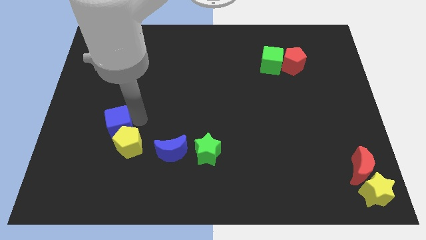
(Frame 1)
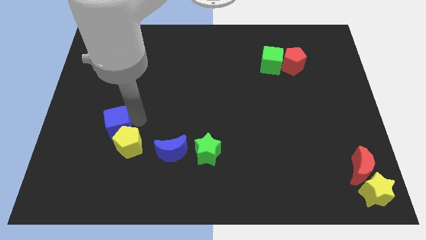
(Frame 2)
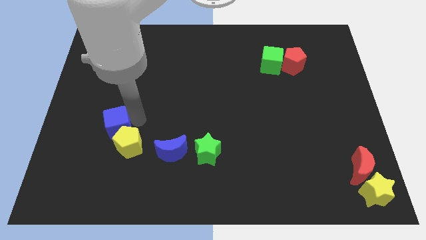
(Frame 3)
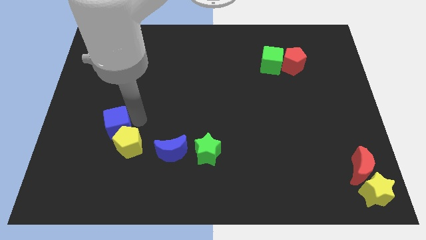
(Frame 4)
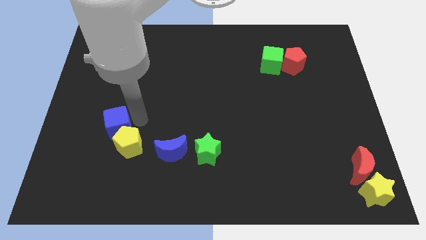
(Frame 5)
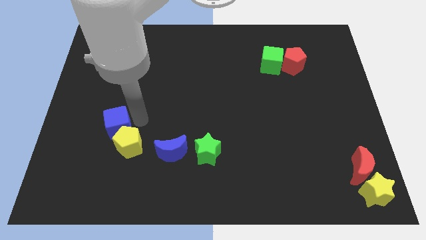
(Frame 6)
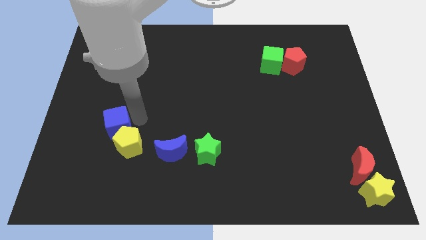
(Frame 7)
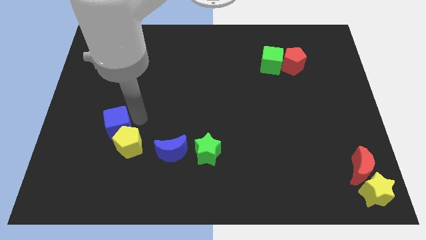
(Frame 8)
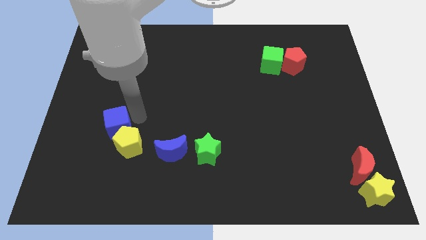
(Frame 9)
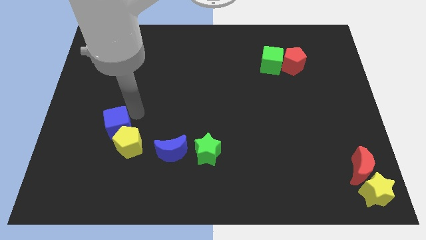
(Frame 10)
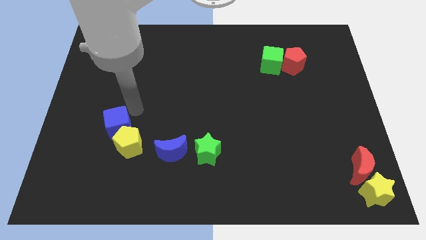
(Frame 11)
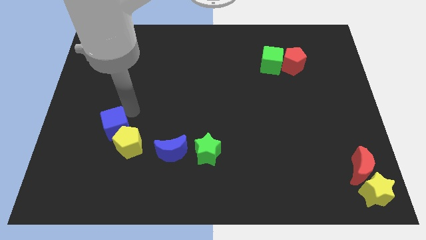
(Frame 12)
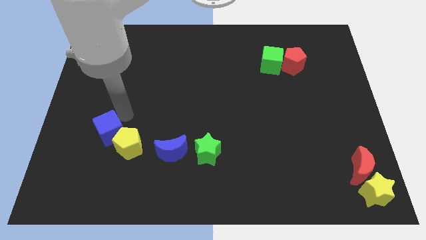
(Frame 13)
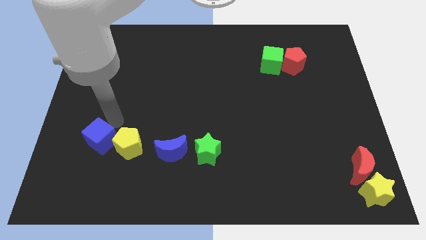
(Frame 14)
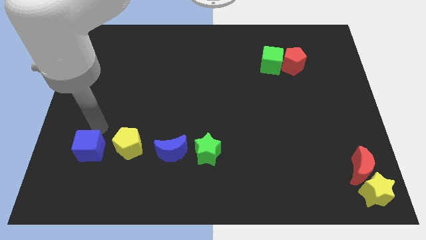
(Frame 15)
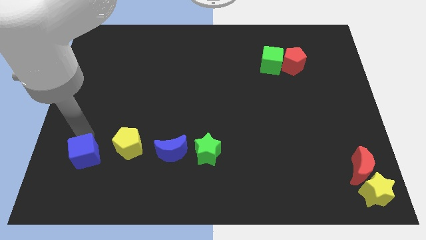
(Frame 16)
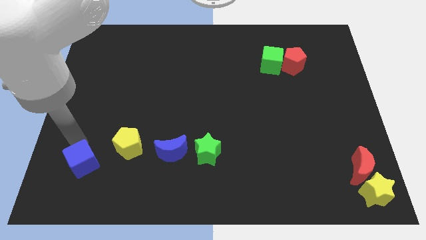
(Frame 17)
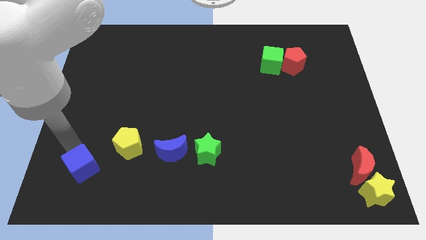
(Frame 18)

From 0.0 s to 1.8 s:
move the blue cube left to the yellow pentagon

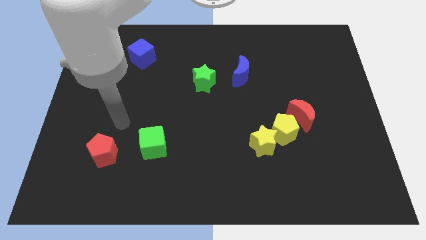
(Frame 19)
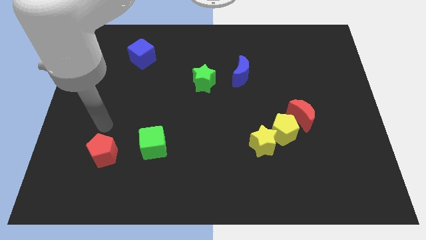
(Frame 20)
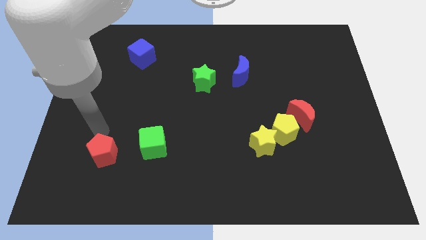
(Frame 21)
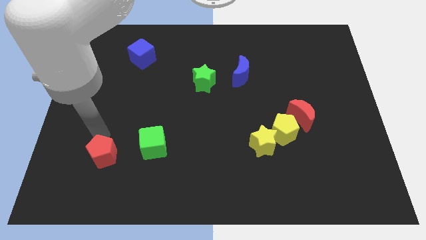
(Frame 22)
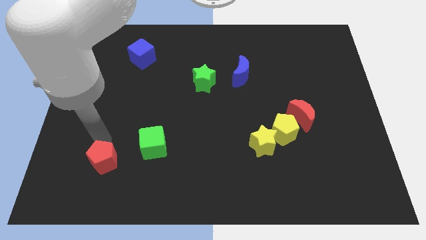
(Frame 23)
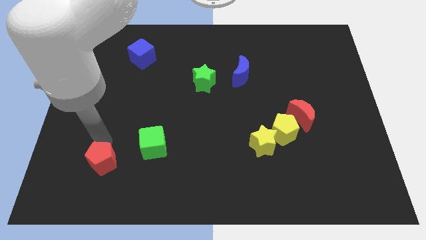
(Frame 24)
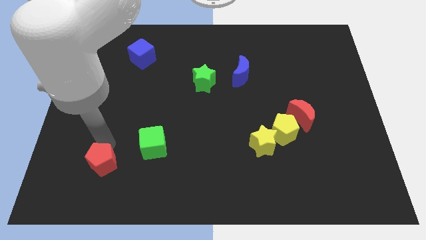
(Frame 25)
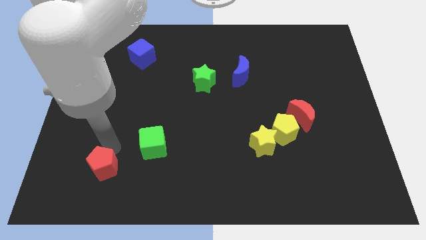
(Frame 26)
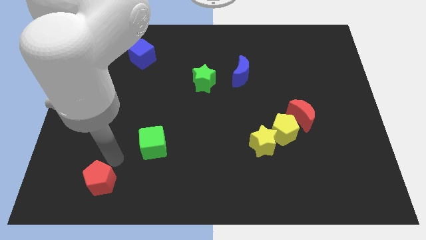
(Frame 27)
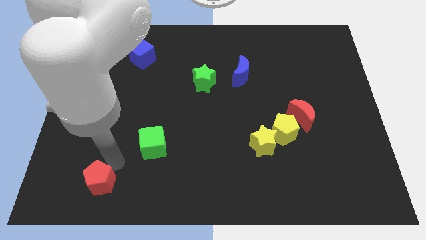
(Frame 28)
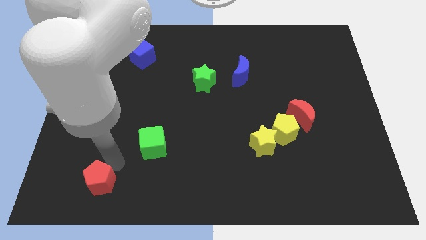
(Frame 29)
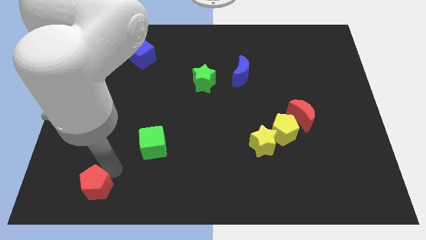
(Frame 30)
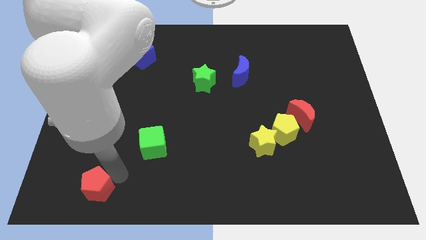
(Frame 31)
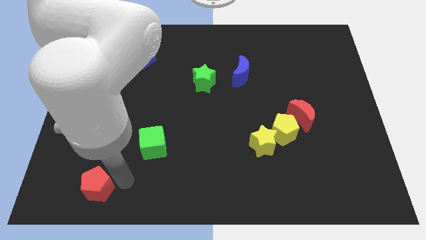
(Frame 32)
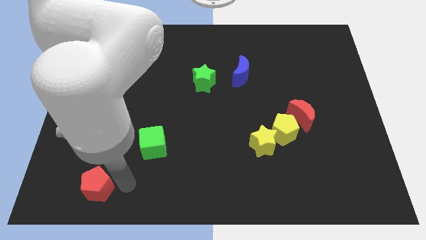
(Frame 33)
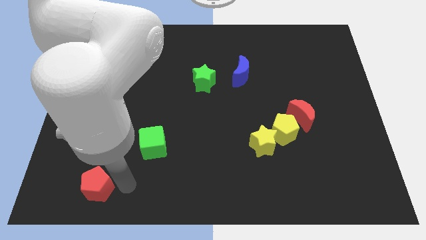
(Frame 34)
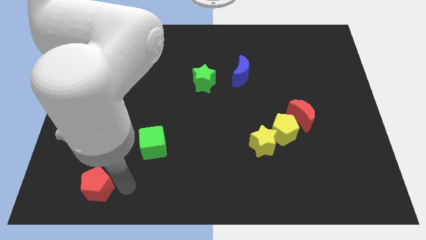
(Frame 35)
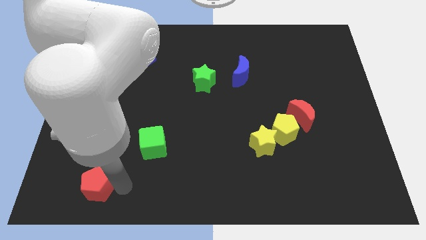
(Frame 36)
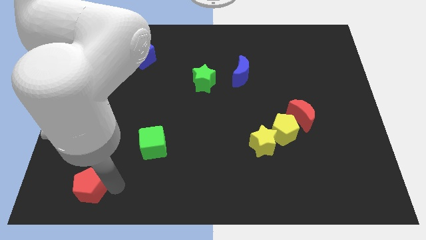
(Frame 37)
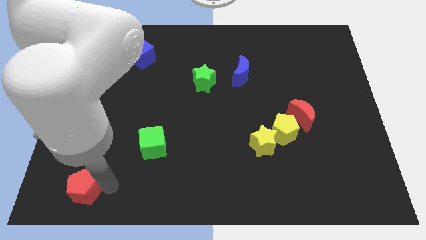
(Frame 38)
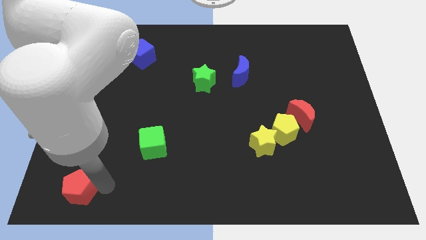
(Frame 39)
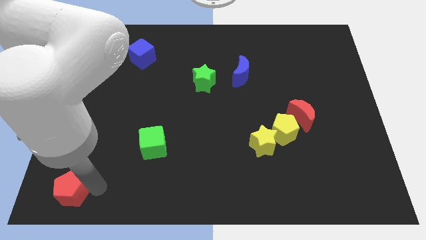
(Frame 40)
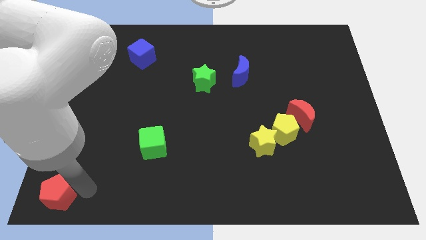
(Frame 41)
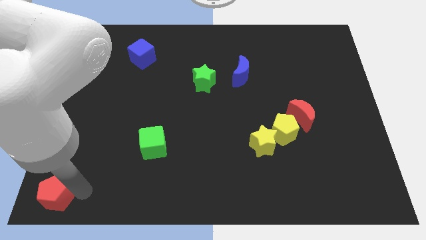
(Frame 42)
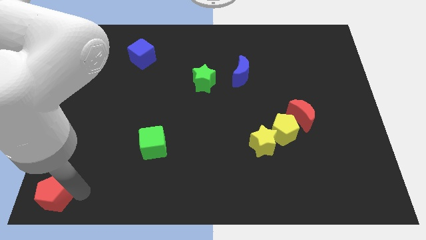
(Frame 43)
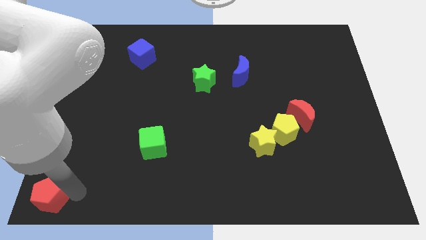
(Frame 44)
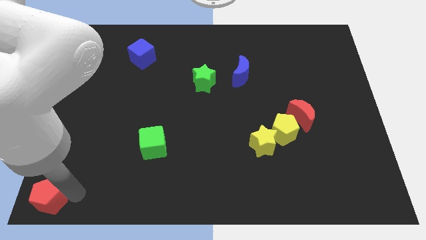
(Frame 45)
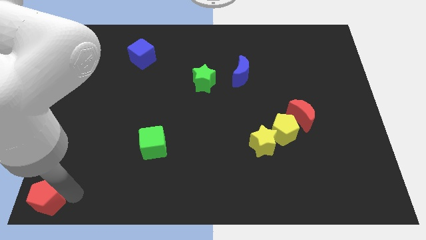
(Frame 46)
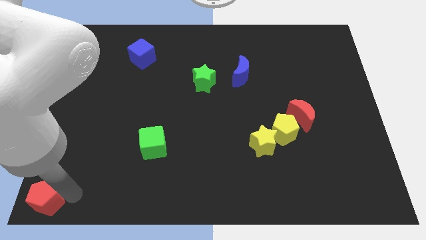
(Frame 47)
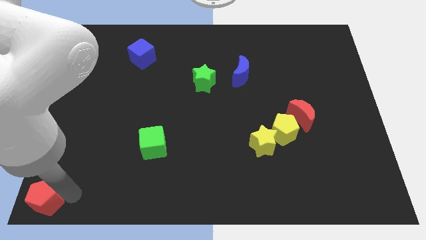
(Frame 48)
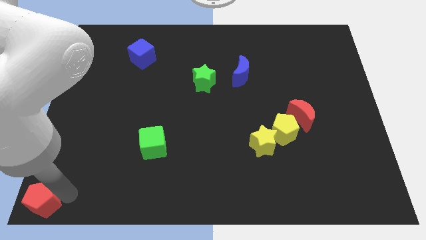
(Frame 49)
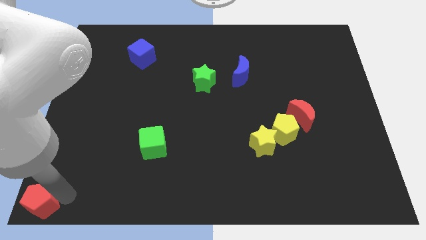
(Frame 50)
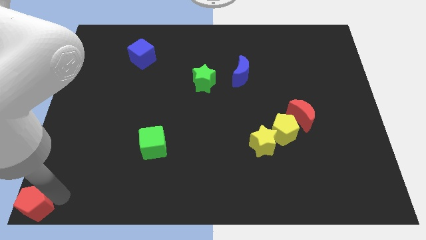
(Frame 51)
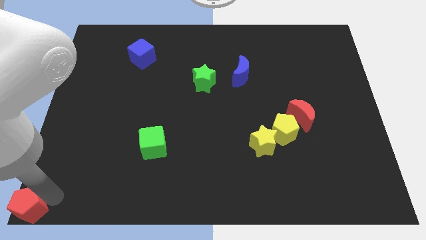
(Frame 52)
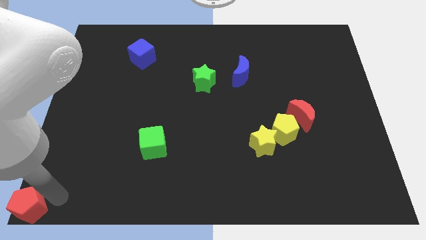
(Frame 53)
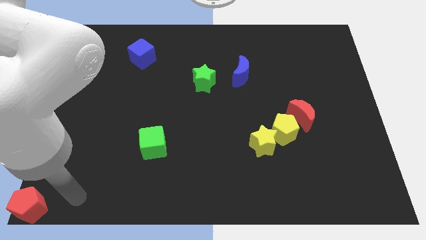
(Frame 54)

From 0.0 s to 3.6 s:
push the red pentagon to the bottom left corner of the board

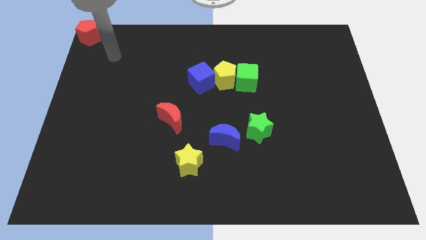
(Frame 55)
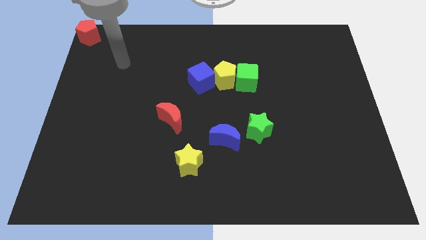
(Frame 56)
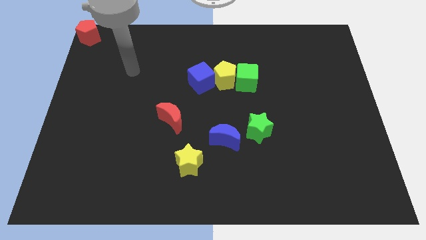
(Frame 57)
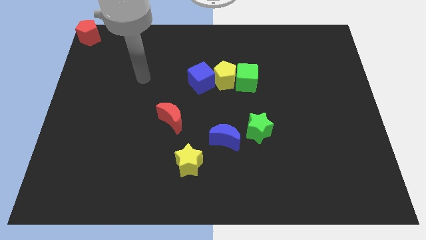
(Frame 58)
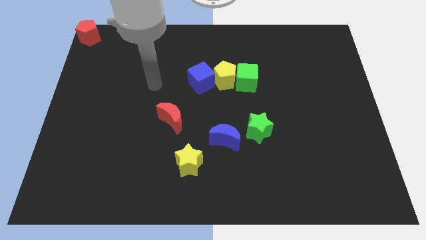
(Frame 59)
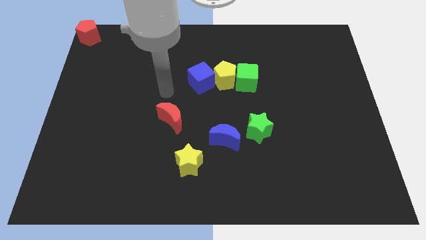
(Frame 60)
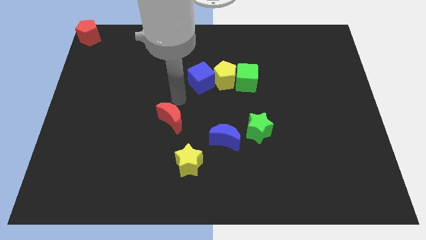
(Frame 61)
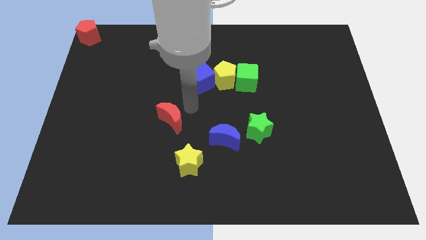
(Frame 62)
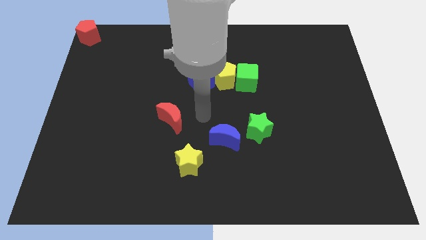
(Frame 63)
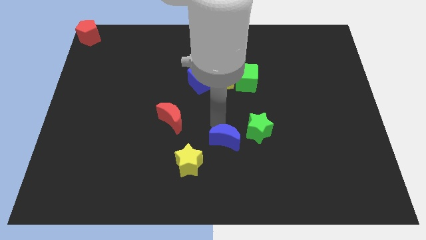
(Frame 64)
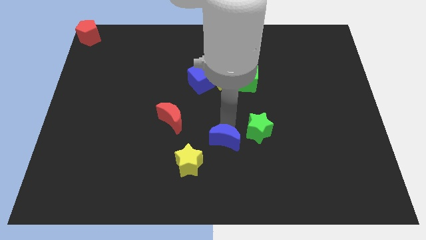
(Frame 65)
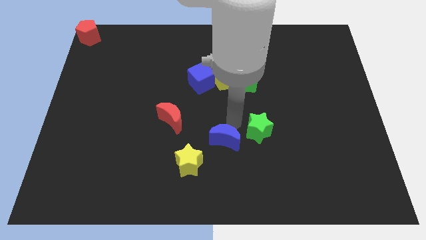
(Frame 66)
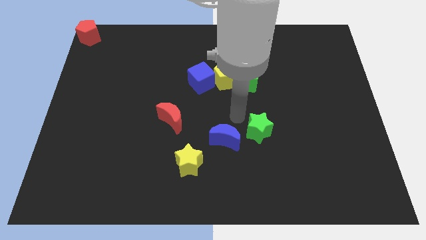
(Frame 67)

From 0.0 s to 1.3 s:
place the arm above the blue moon

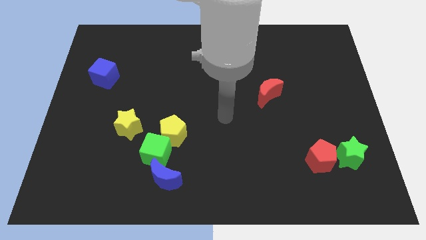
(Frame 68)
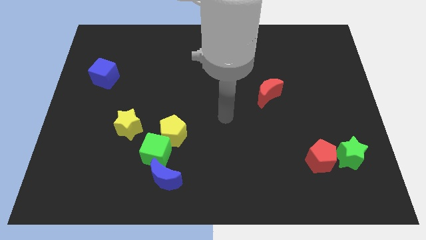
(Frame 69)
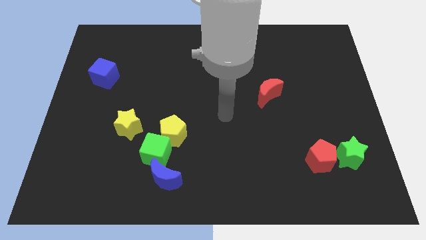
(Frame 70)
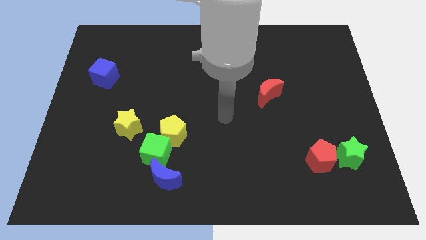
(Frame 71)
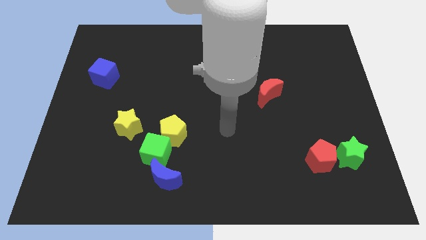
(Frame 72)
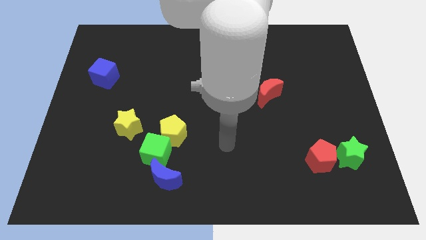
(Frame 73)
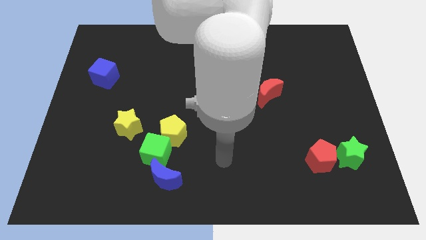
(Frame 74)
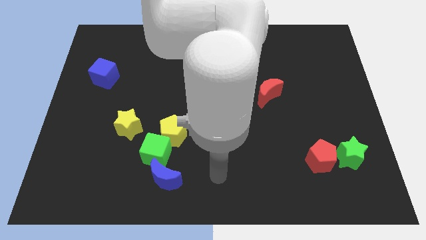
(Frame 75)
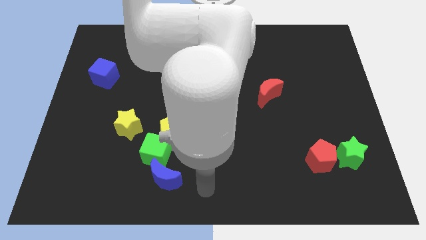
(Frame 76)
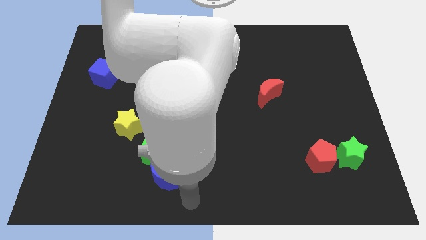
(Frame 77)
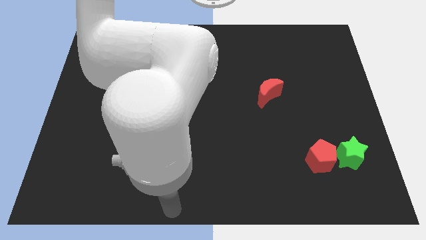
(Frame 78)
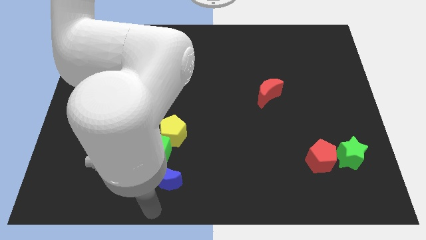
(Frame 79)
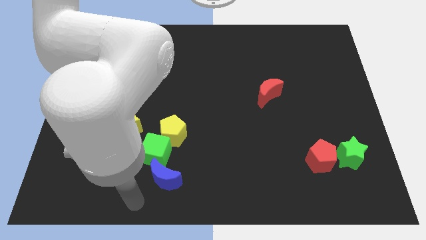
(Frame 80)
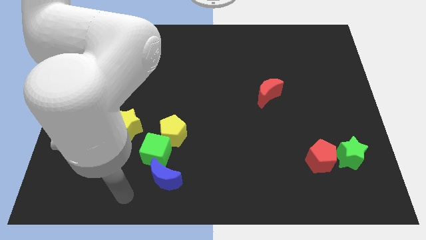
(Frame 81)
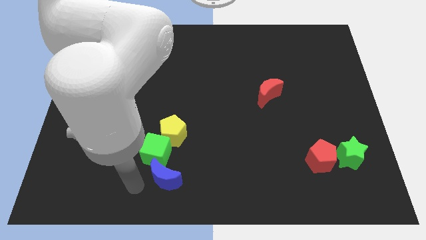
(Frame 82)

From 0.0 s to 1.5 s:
move the arm towards the blue crescent

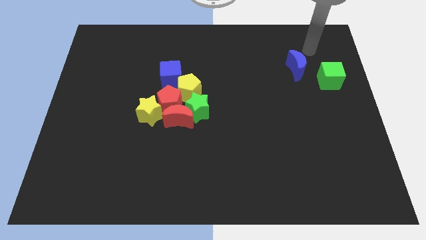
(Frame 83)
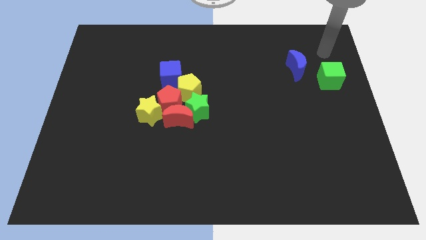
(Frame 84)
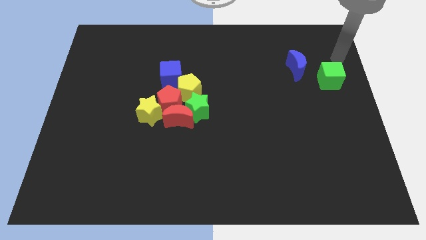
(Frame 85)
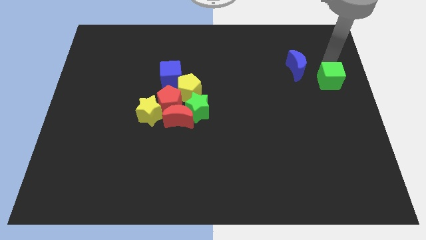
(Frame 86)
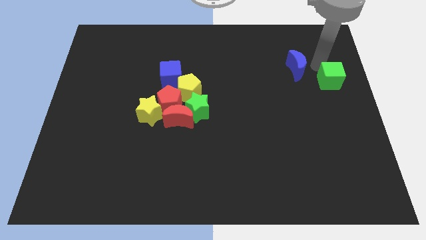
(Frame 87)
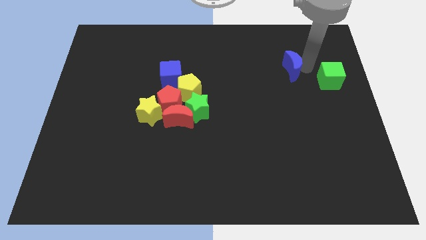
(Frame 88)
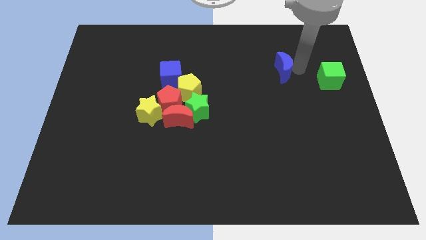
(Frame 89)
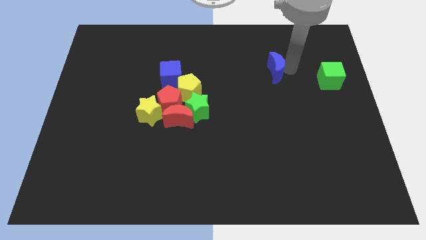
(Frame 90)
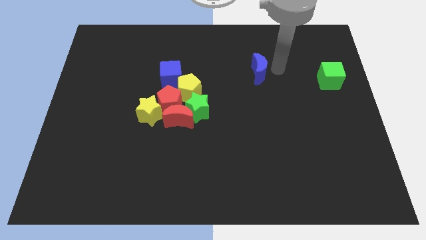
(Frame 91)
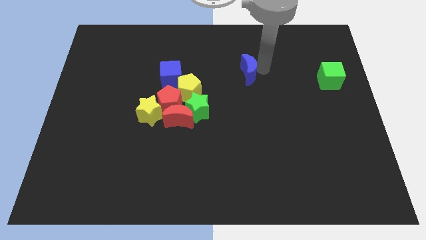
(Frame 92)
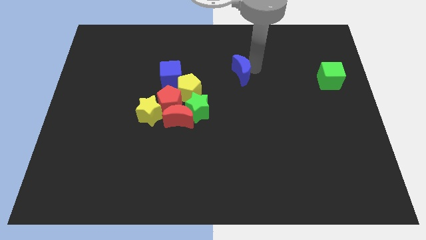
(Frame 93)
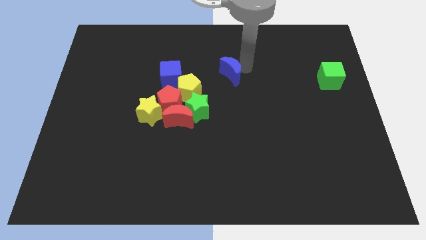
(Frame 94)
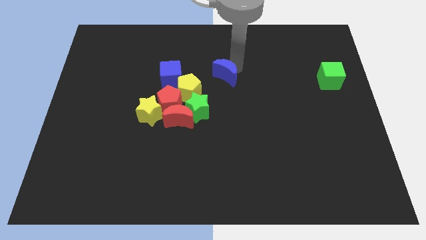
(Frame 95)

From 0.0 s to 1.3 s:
place the blue moon right to the yellow pentagon
